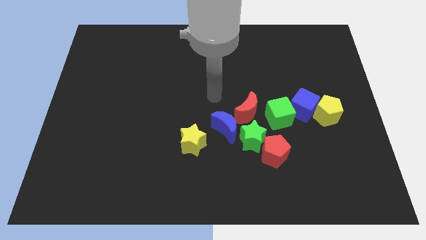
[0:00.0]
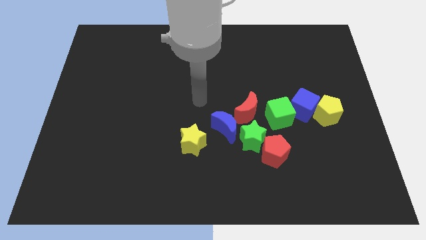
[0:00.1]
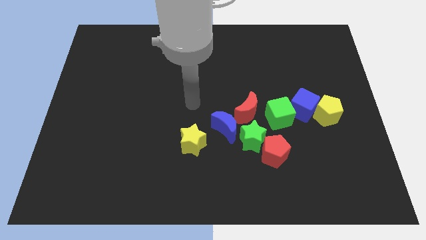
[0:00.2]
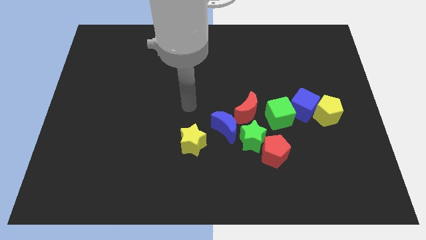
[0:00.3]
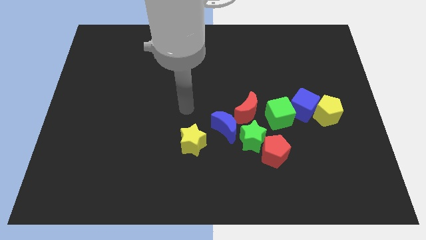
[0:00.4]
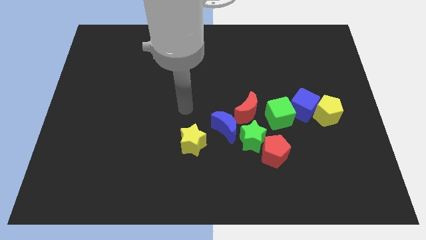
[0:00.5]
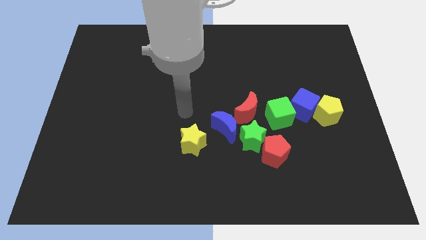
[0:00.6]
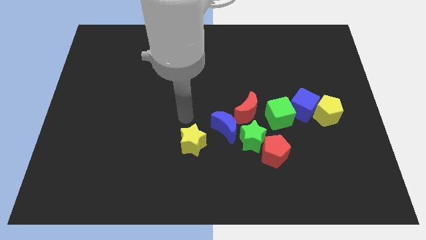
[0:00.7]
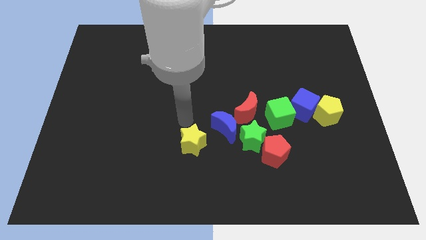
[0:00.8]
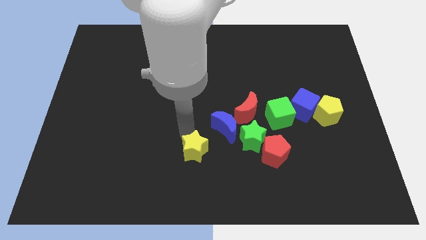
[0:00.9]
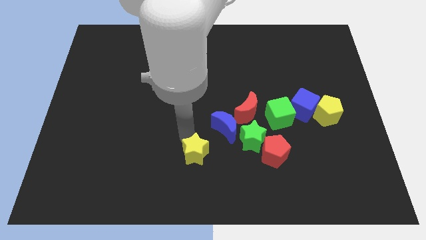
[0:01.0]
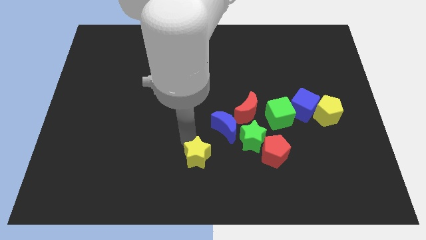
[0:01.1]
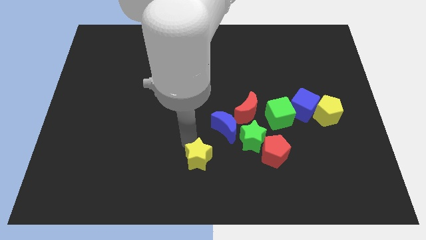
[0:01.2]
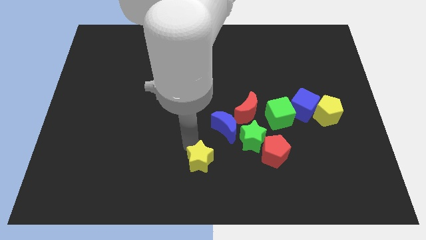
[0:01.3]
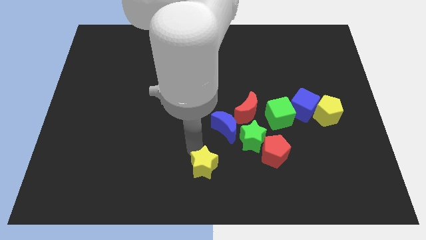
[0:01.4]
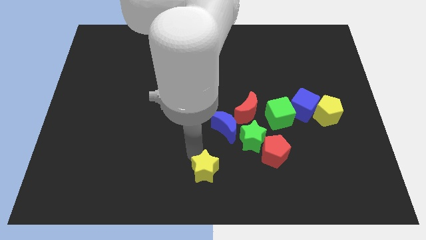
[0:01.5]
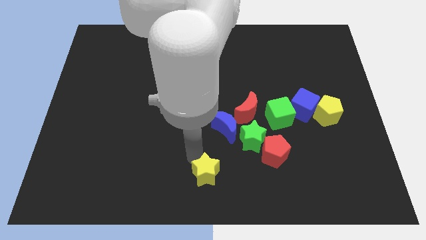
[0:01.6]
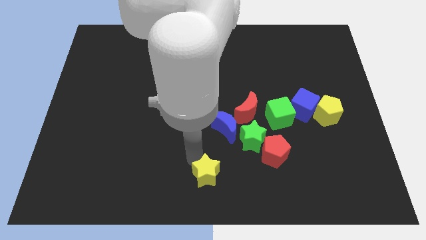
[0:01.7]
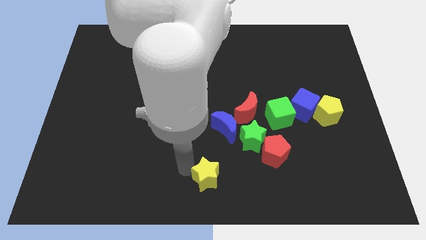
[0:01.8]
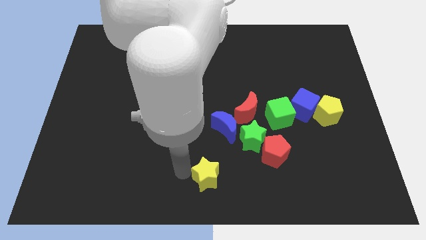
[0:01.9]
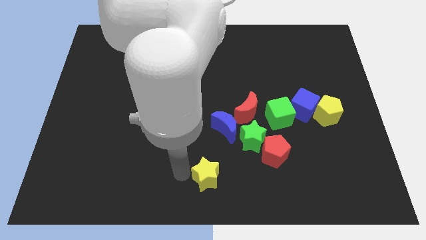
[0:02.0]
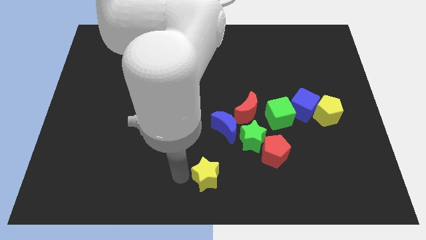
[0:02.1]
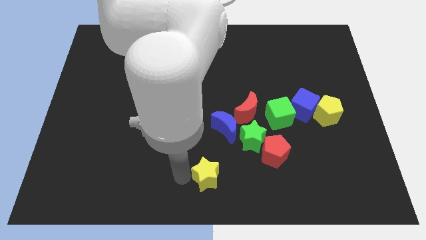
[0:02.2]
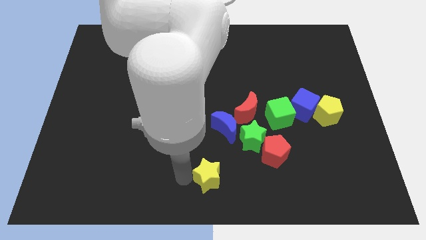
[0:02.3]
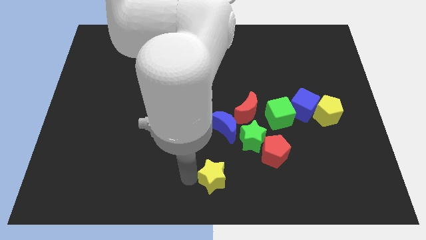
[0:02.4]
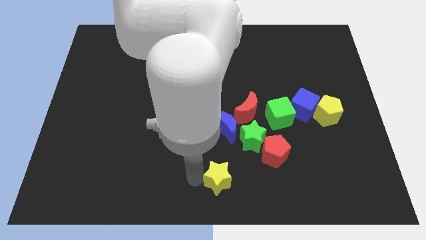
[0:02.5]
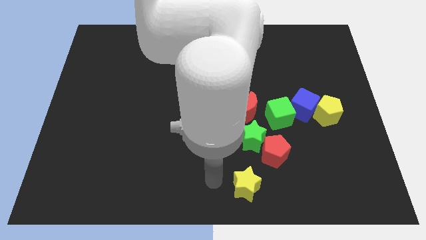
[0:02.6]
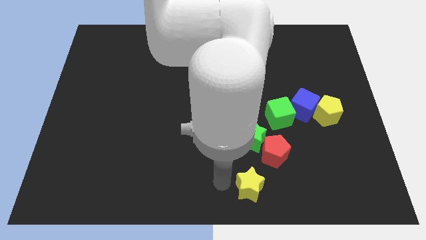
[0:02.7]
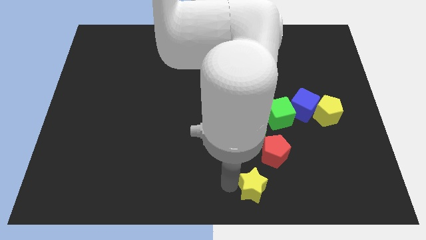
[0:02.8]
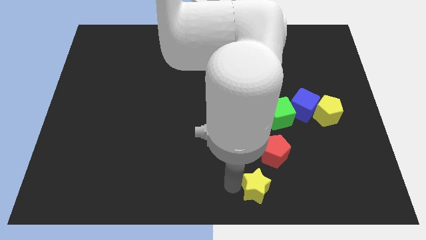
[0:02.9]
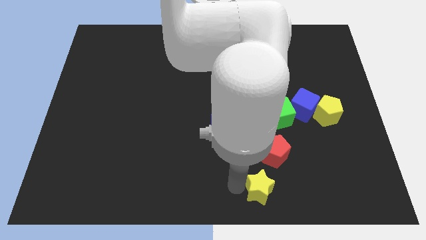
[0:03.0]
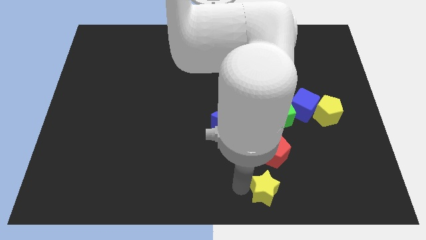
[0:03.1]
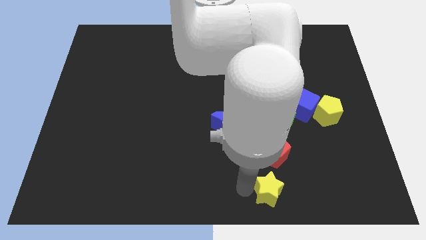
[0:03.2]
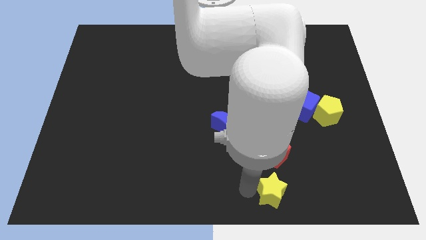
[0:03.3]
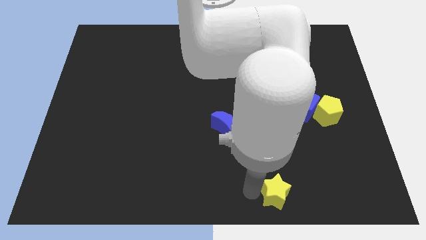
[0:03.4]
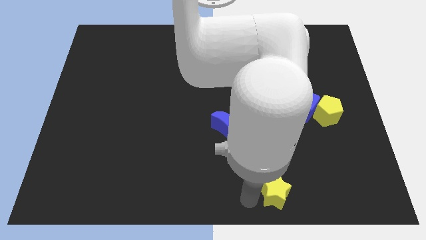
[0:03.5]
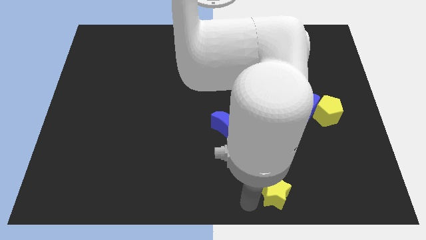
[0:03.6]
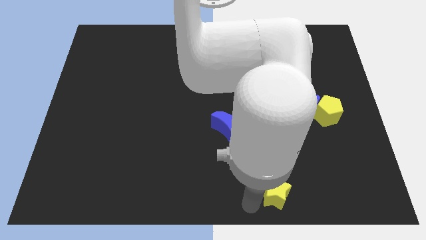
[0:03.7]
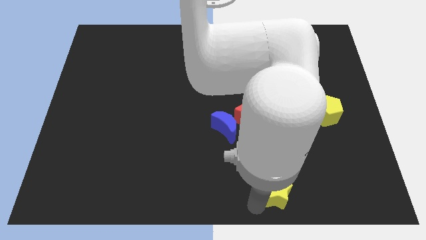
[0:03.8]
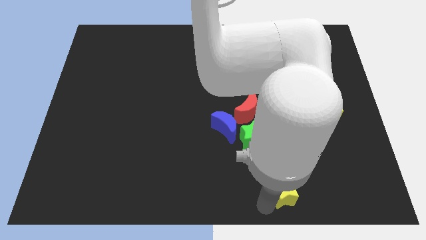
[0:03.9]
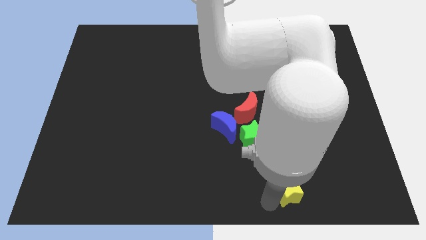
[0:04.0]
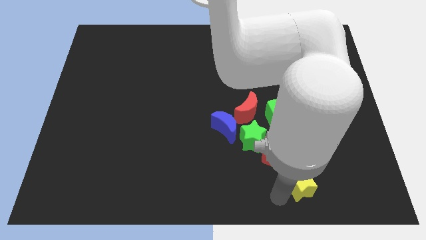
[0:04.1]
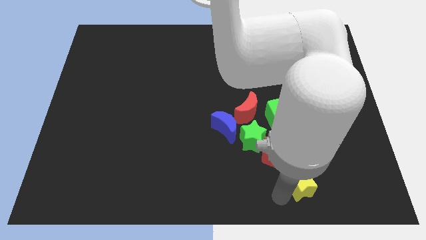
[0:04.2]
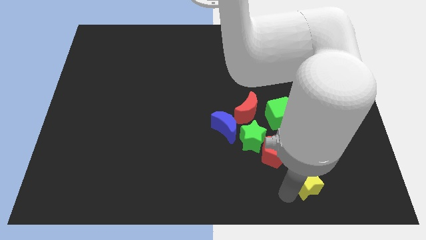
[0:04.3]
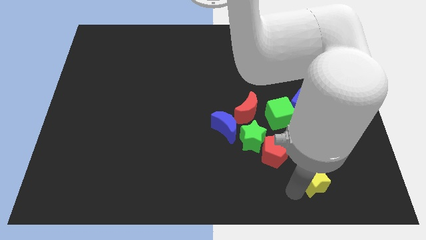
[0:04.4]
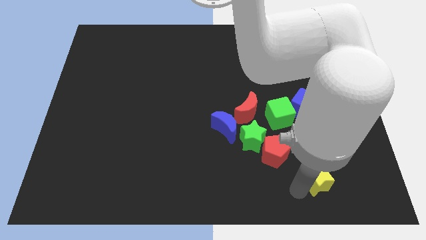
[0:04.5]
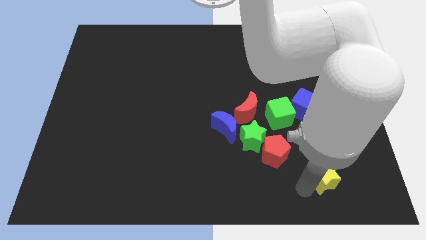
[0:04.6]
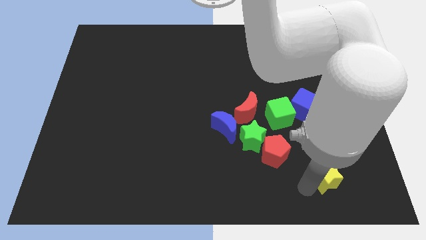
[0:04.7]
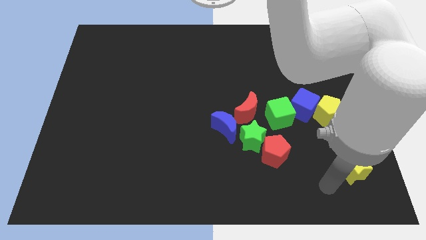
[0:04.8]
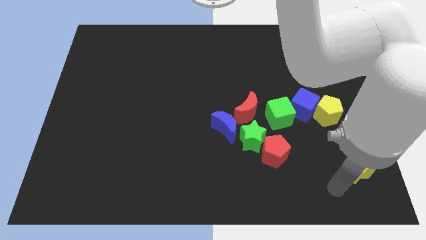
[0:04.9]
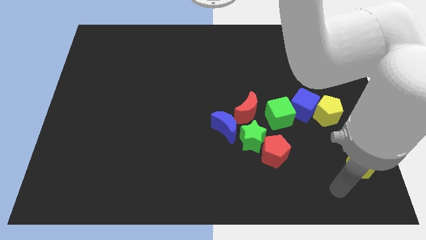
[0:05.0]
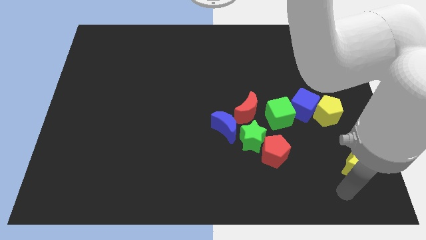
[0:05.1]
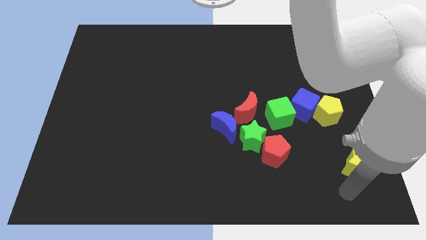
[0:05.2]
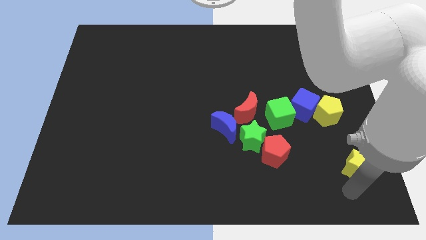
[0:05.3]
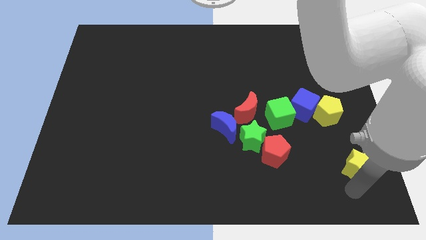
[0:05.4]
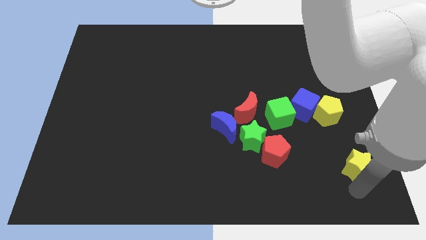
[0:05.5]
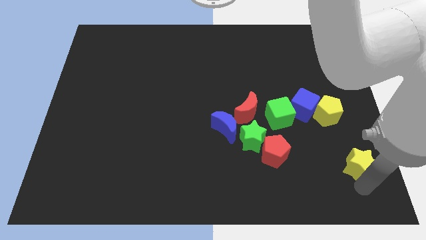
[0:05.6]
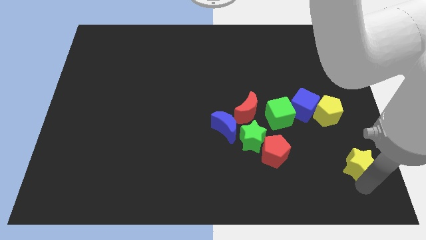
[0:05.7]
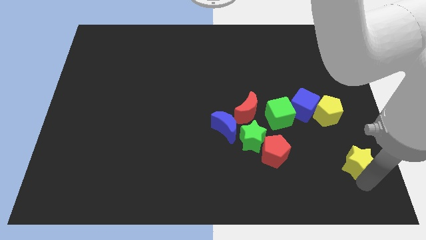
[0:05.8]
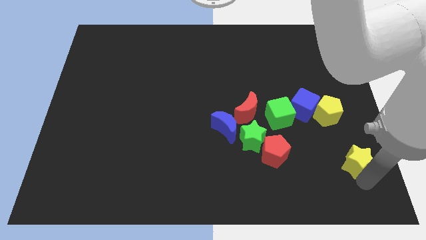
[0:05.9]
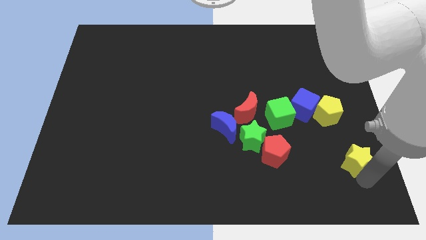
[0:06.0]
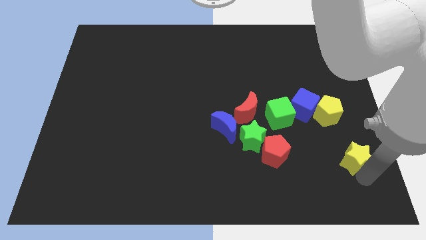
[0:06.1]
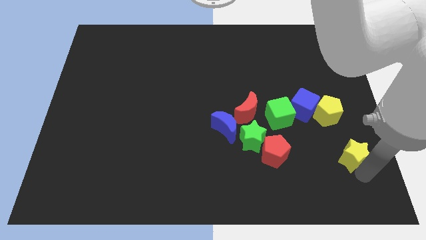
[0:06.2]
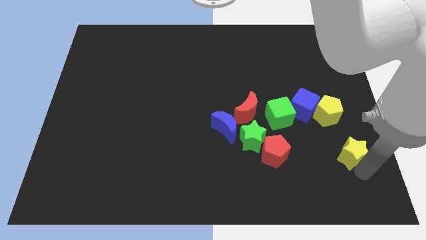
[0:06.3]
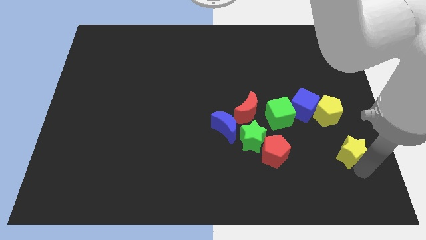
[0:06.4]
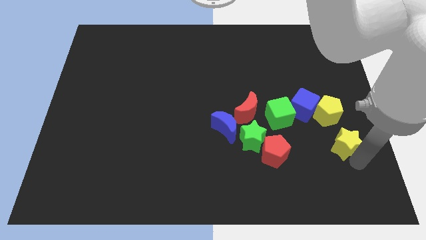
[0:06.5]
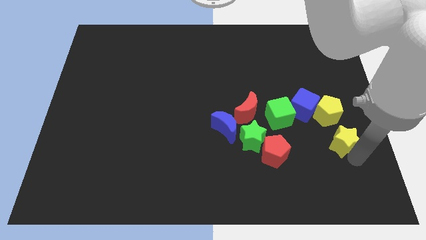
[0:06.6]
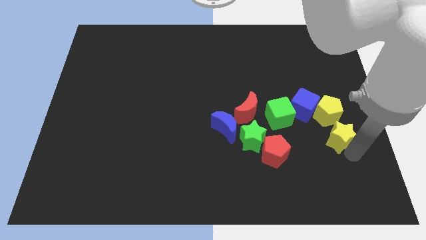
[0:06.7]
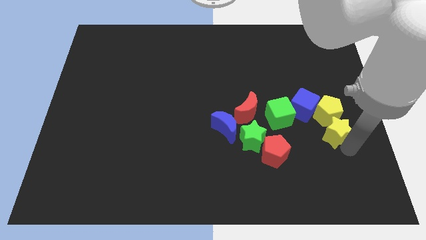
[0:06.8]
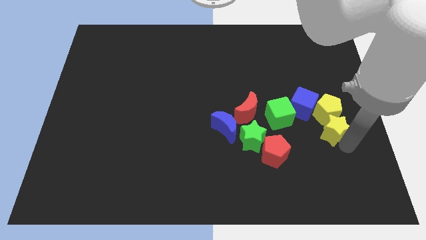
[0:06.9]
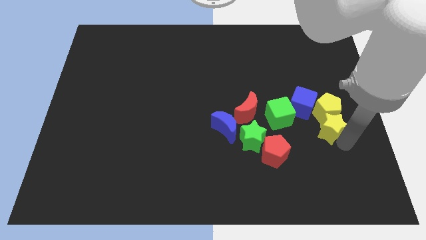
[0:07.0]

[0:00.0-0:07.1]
put the yellow star to the yellow pentagon

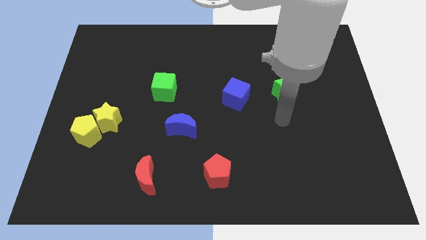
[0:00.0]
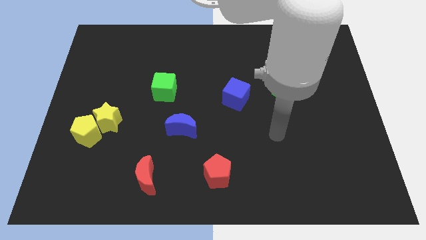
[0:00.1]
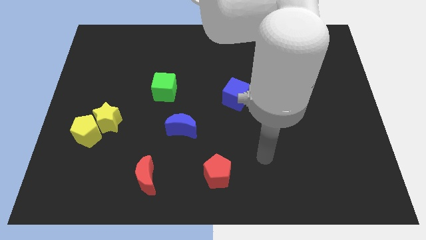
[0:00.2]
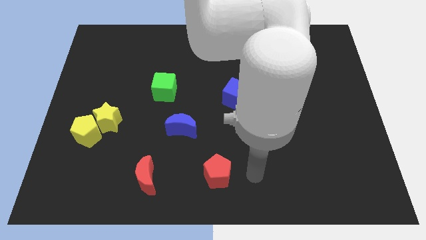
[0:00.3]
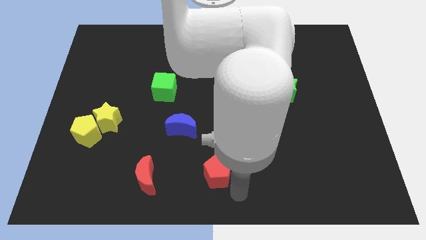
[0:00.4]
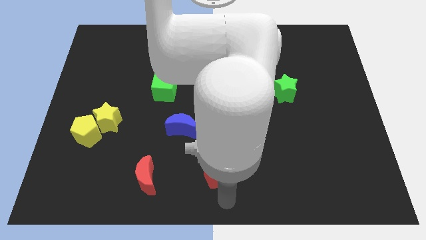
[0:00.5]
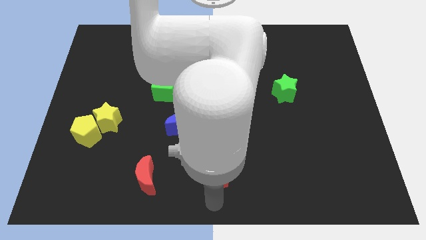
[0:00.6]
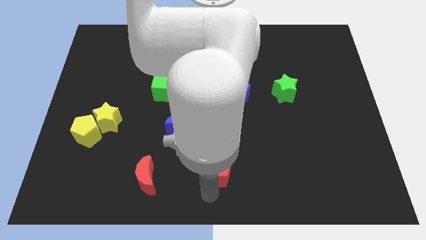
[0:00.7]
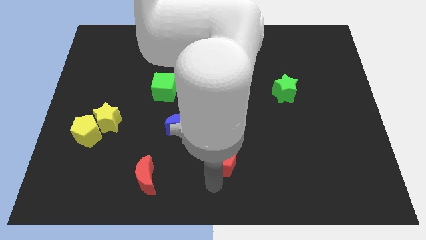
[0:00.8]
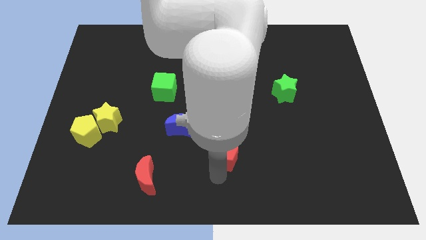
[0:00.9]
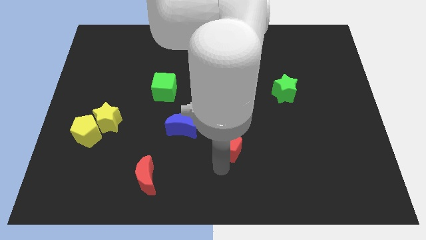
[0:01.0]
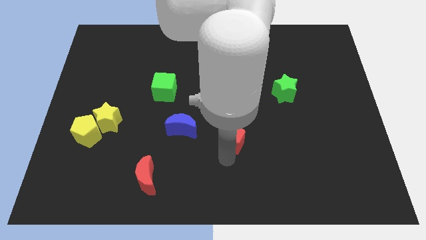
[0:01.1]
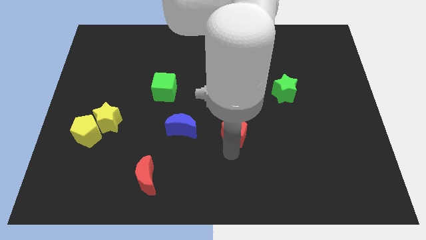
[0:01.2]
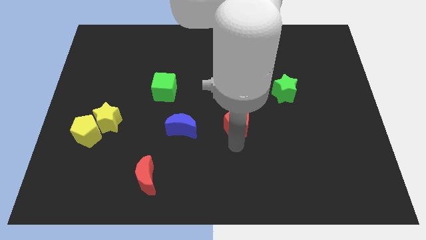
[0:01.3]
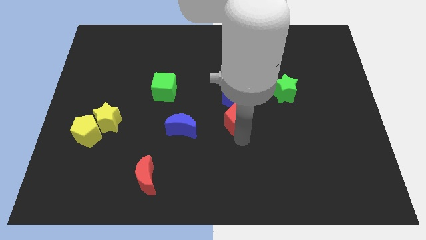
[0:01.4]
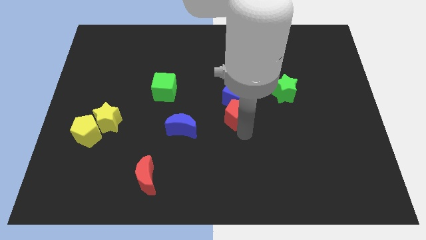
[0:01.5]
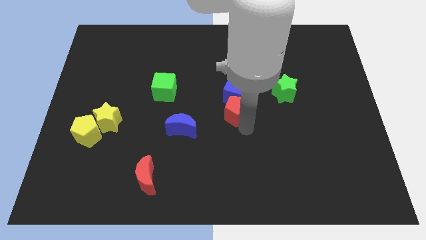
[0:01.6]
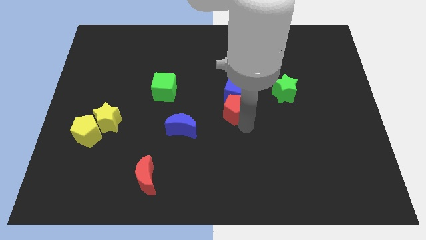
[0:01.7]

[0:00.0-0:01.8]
put the red pentagon next to the blue cube
